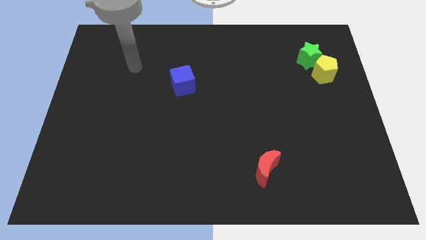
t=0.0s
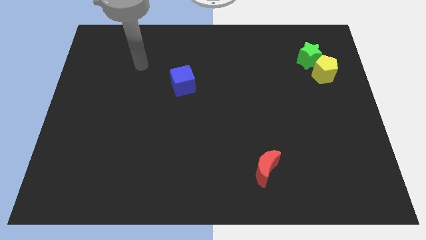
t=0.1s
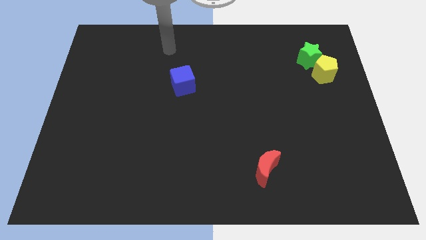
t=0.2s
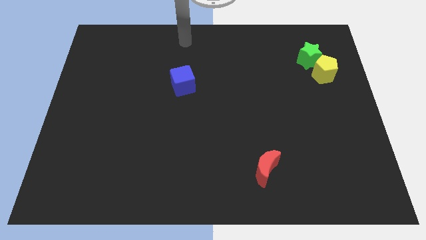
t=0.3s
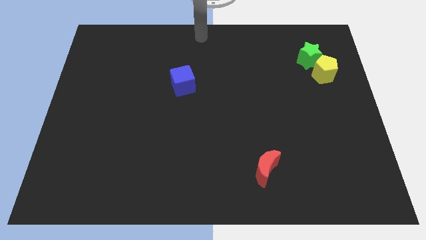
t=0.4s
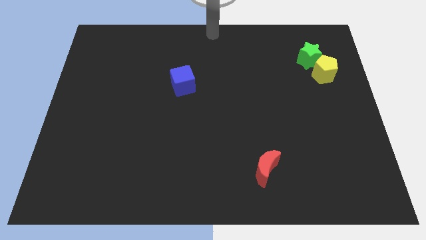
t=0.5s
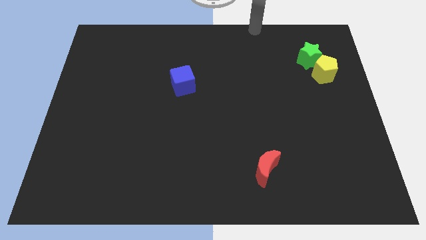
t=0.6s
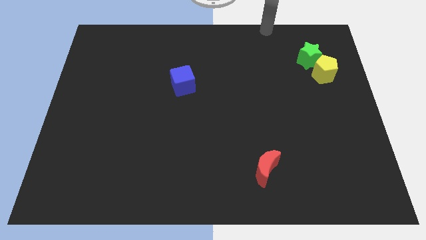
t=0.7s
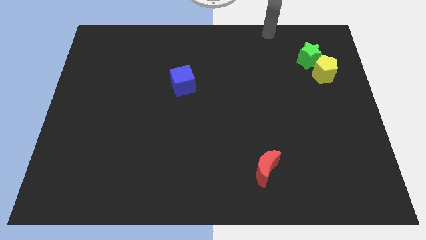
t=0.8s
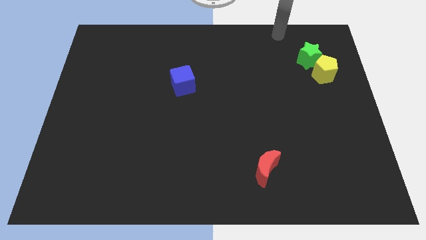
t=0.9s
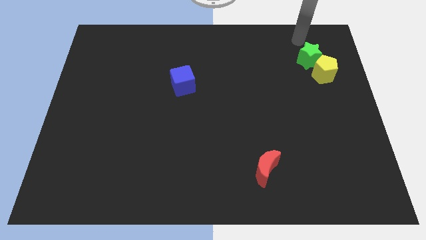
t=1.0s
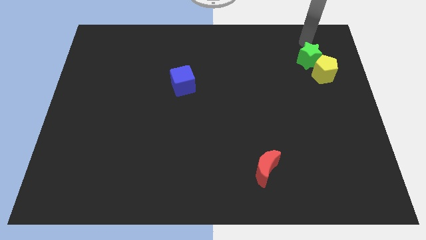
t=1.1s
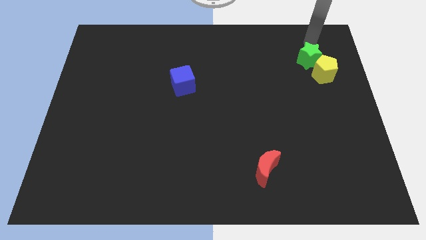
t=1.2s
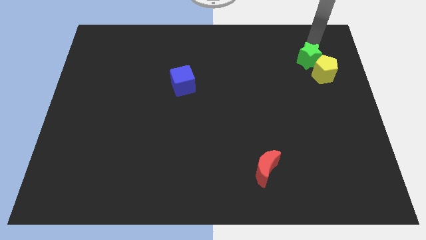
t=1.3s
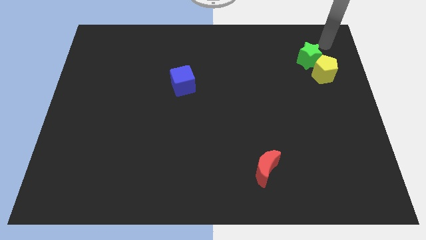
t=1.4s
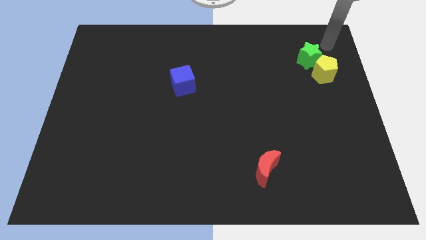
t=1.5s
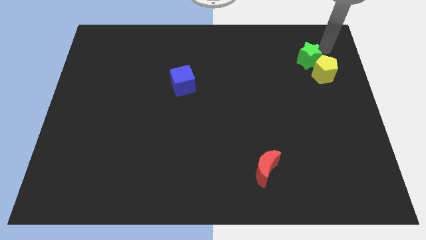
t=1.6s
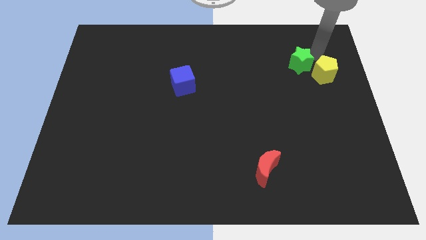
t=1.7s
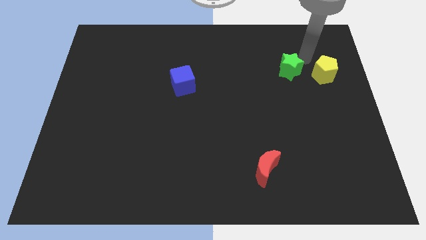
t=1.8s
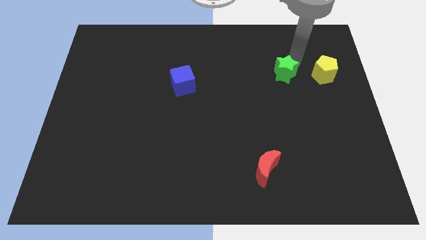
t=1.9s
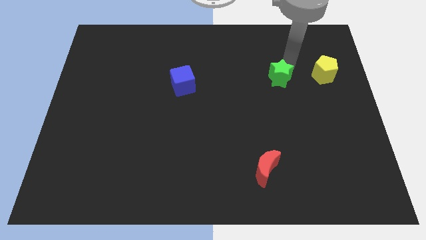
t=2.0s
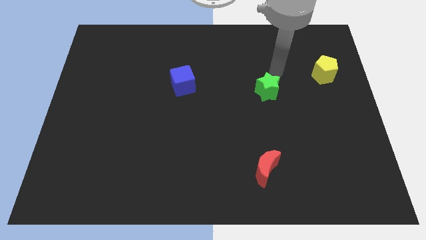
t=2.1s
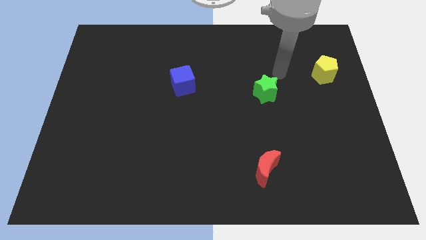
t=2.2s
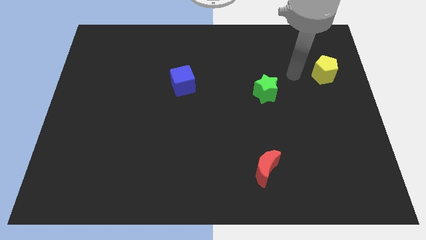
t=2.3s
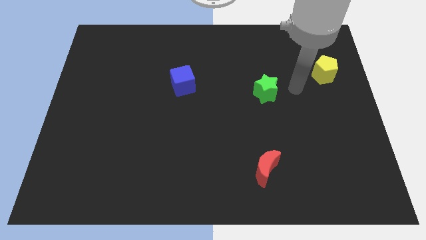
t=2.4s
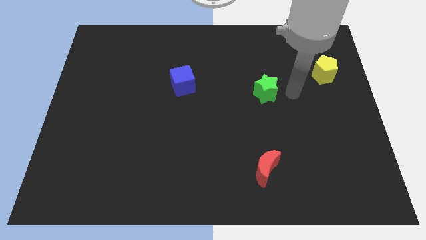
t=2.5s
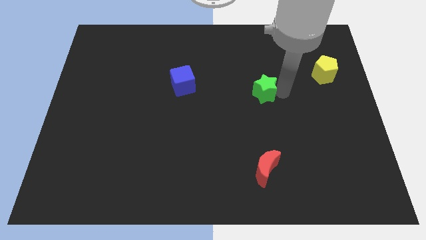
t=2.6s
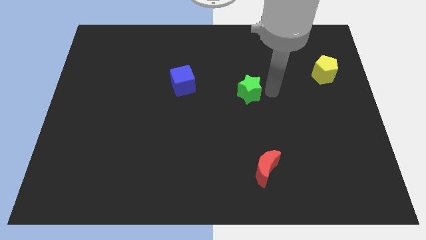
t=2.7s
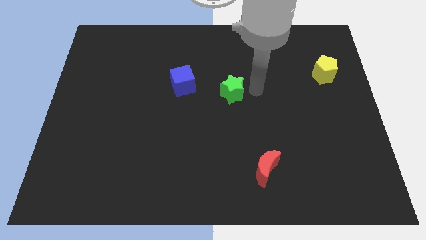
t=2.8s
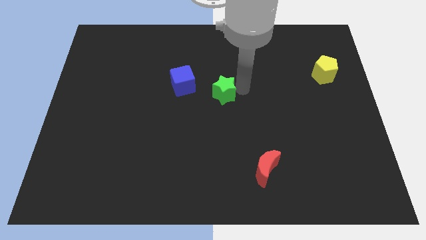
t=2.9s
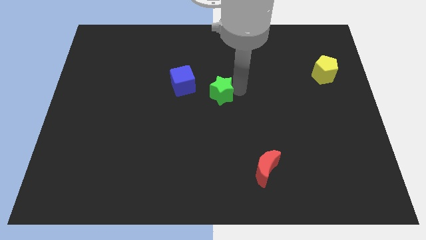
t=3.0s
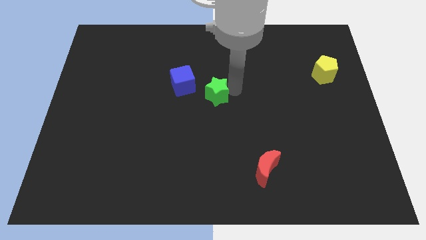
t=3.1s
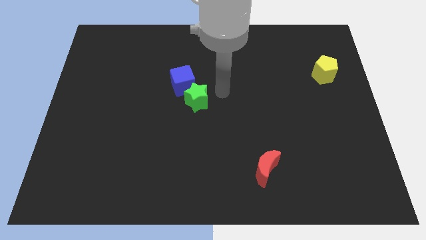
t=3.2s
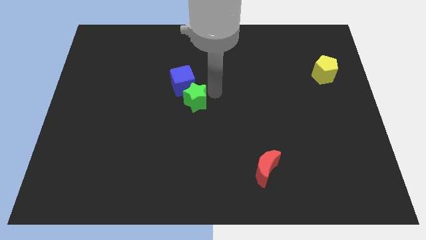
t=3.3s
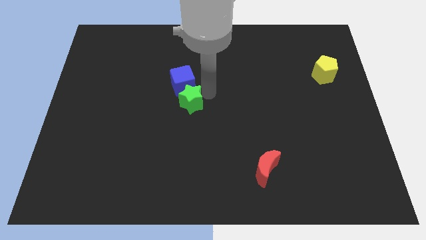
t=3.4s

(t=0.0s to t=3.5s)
move the green star to the blue cube

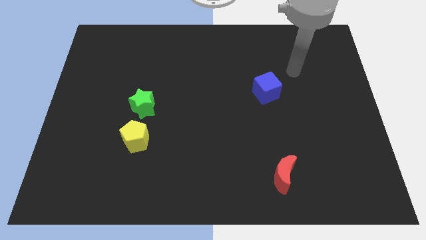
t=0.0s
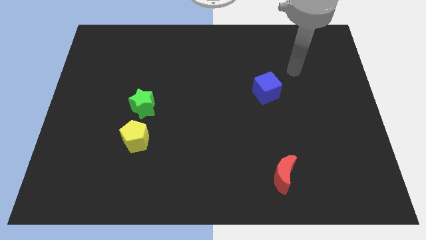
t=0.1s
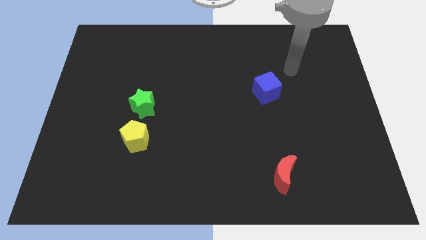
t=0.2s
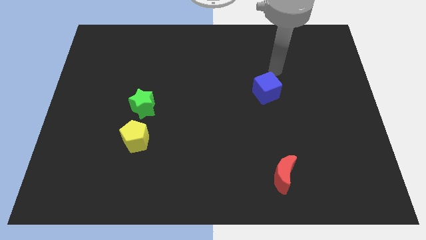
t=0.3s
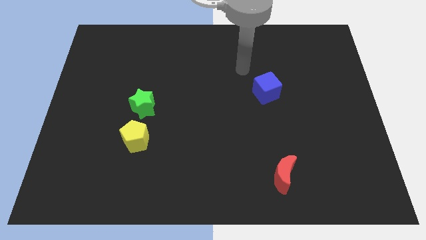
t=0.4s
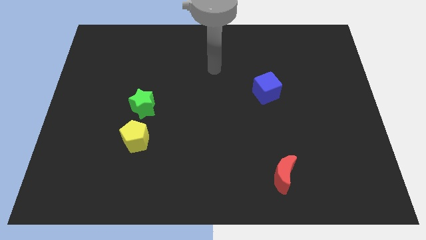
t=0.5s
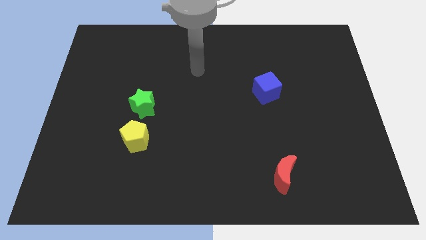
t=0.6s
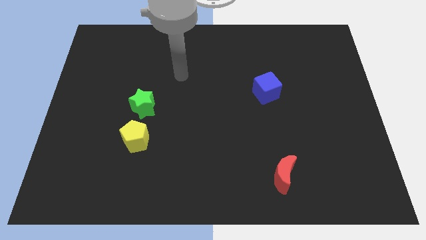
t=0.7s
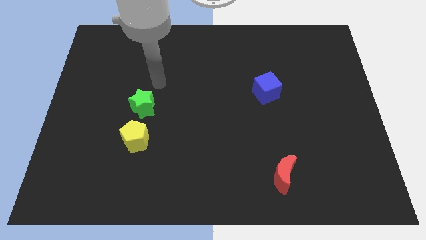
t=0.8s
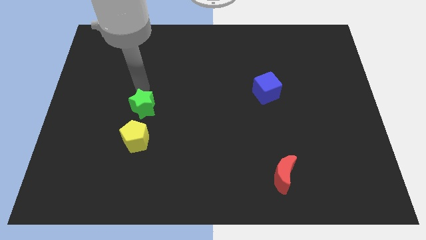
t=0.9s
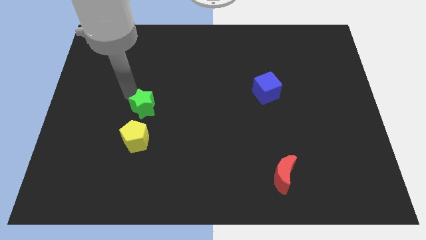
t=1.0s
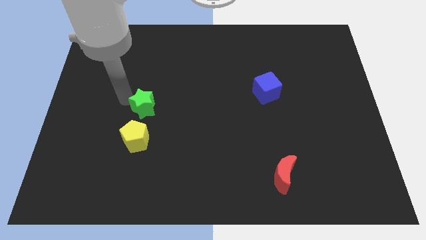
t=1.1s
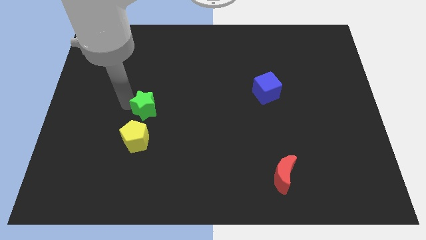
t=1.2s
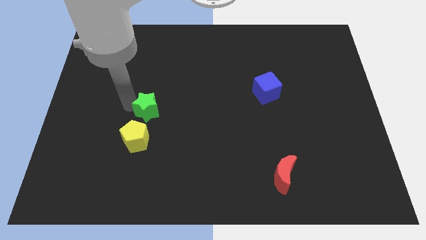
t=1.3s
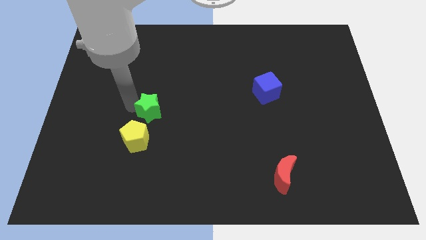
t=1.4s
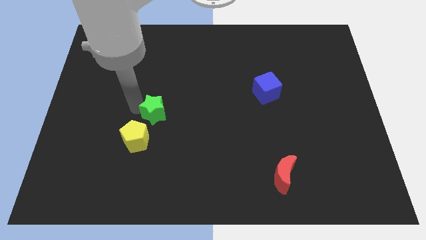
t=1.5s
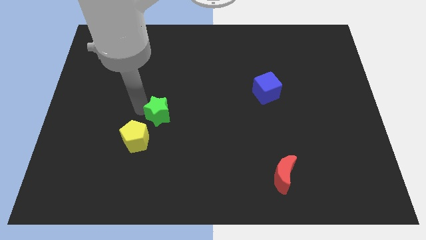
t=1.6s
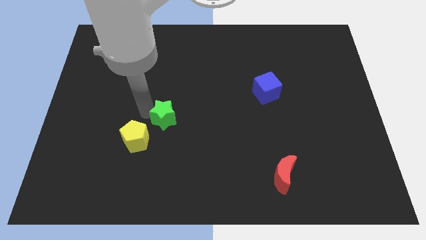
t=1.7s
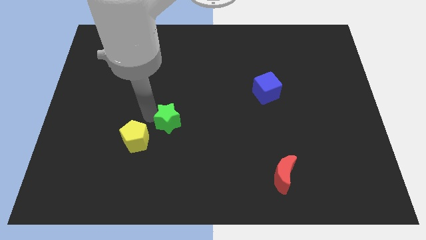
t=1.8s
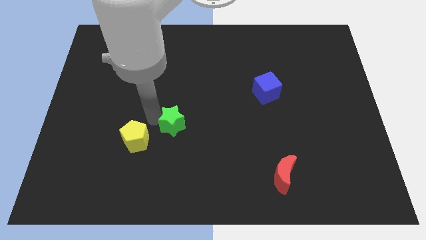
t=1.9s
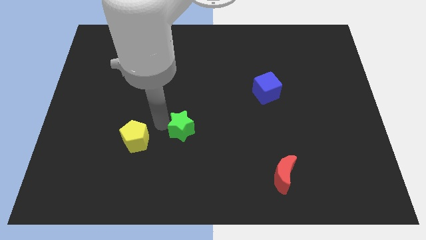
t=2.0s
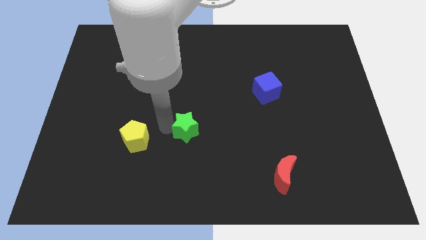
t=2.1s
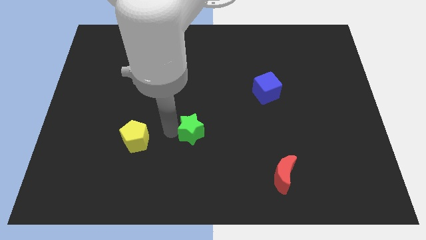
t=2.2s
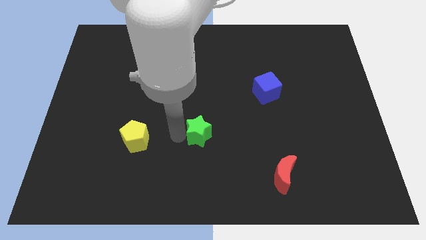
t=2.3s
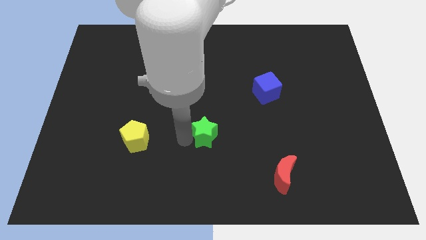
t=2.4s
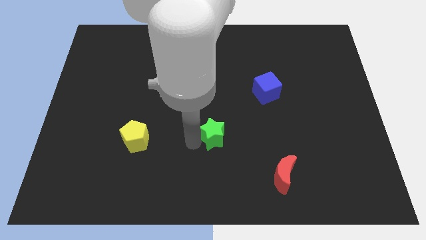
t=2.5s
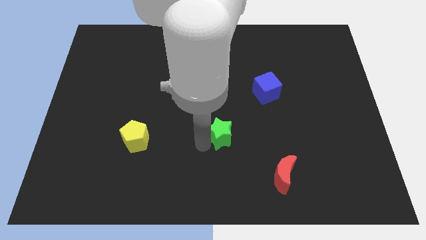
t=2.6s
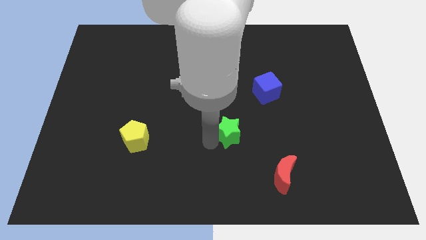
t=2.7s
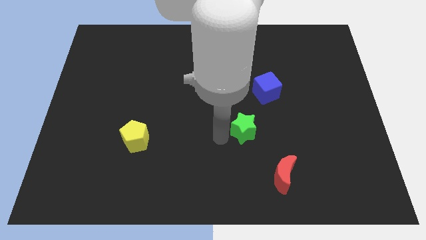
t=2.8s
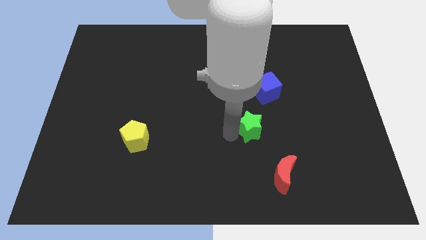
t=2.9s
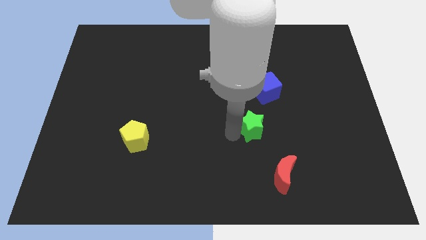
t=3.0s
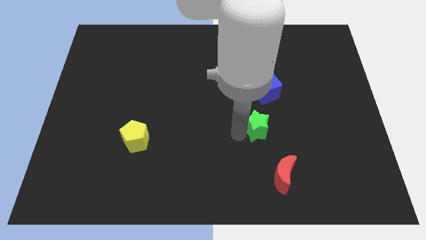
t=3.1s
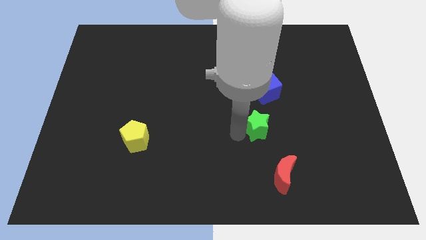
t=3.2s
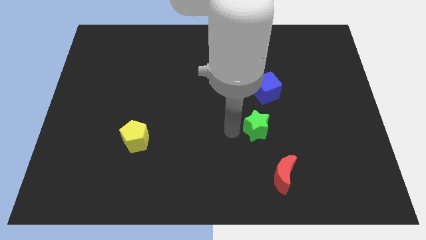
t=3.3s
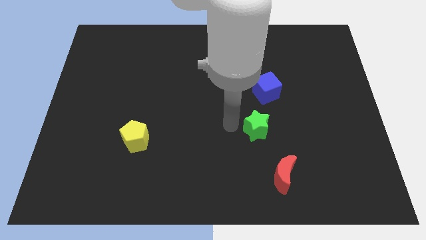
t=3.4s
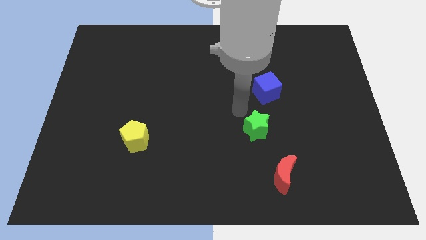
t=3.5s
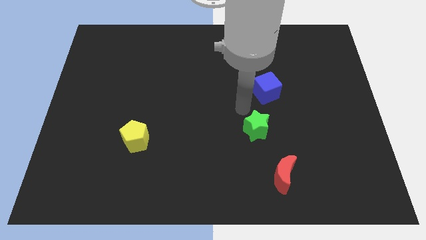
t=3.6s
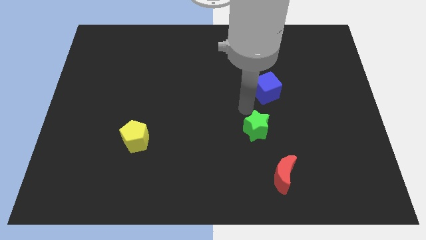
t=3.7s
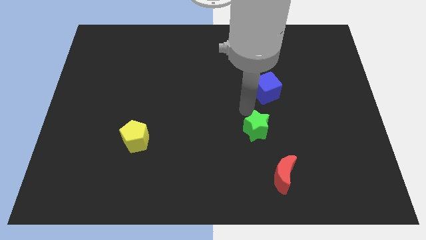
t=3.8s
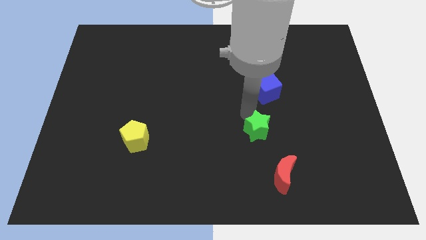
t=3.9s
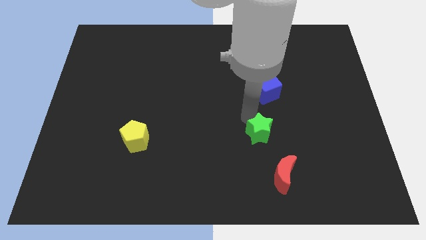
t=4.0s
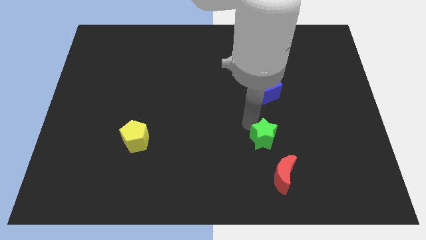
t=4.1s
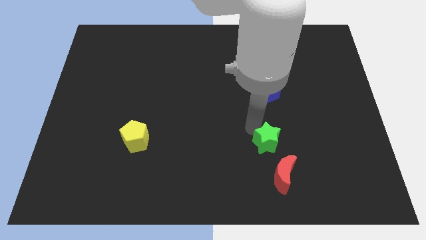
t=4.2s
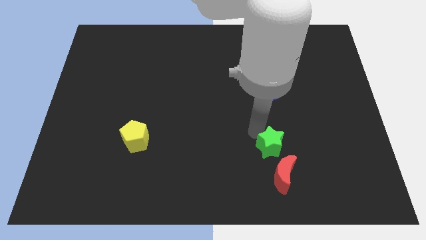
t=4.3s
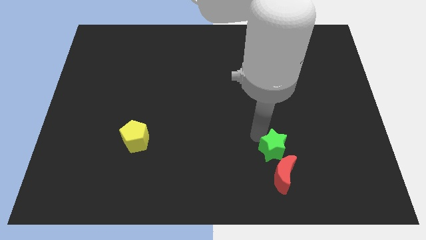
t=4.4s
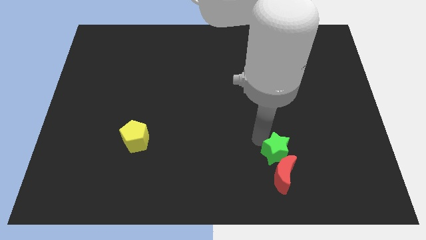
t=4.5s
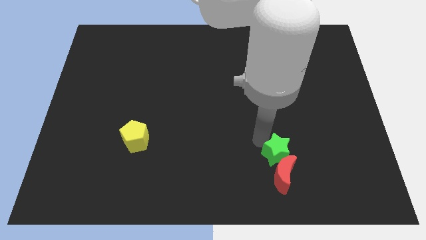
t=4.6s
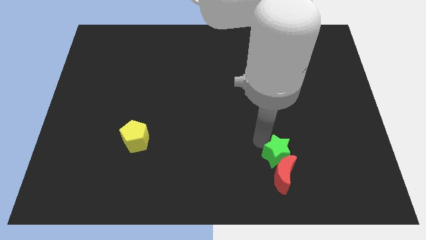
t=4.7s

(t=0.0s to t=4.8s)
move the green block next to the red block

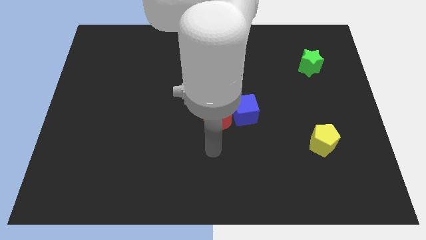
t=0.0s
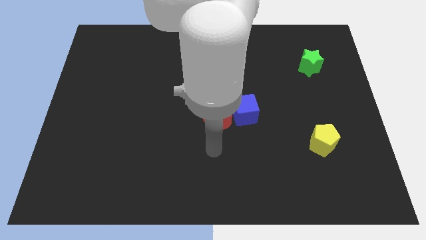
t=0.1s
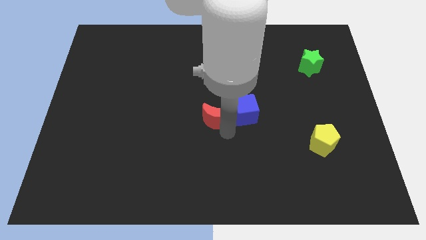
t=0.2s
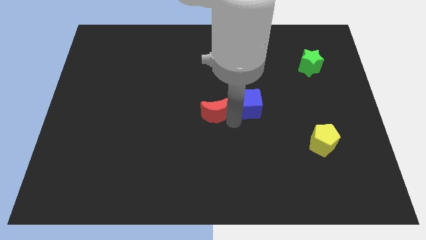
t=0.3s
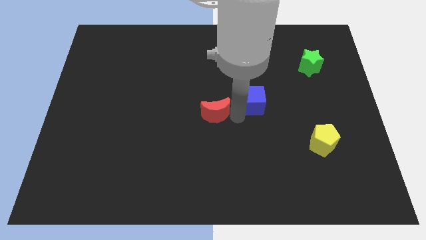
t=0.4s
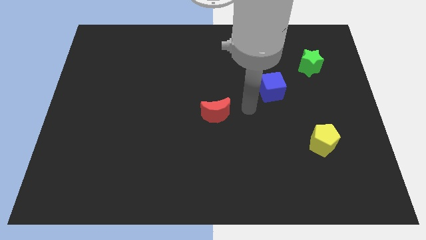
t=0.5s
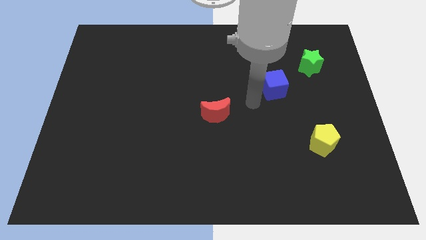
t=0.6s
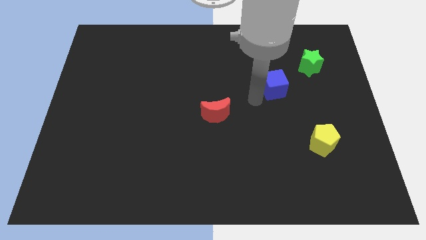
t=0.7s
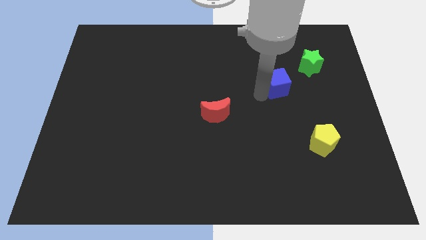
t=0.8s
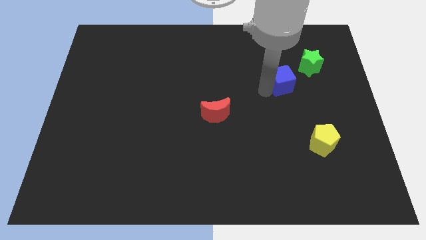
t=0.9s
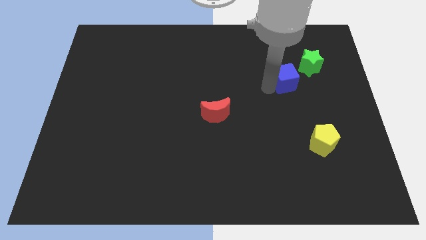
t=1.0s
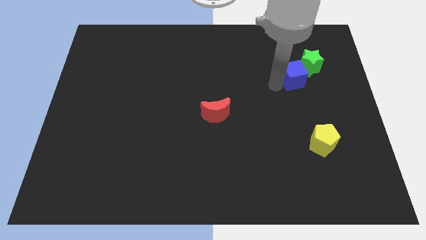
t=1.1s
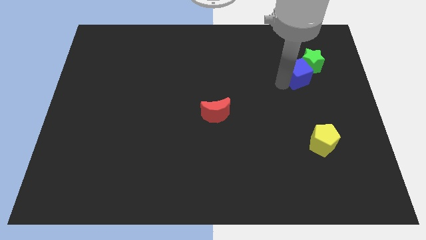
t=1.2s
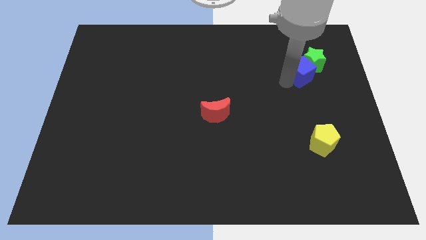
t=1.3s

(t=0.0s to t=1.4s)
move the blue cube to the green star
